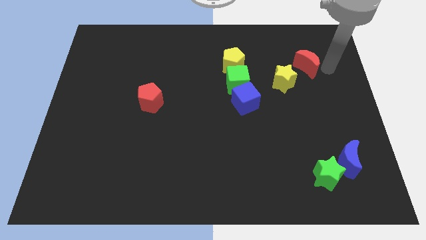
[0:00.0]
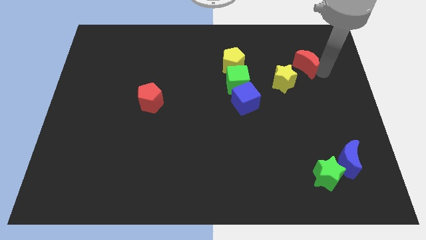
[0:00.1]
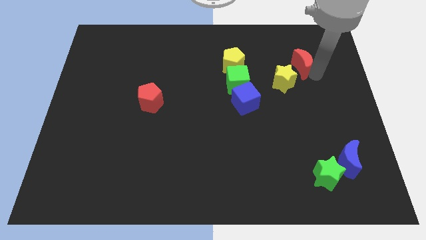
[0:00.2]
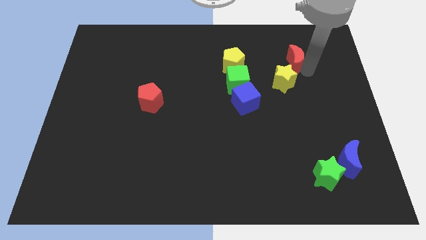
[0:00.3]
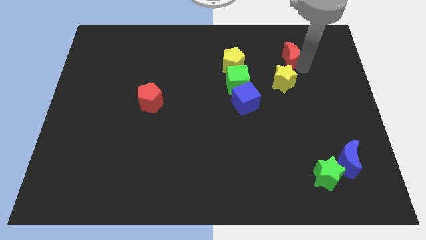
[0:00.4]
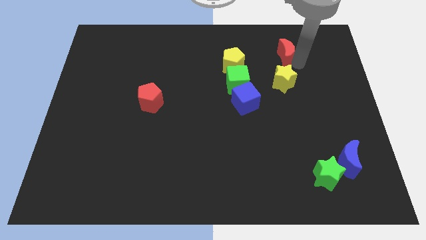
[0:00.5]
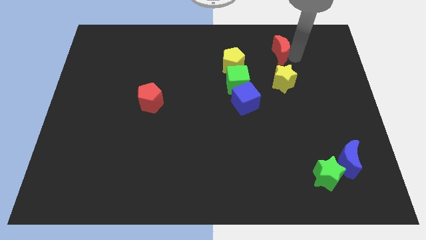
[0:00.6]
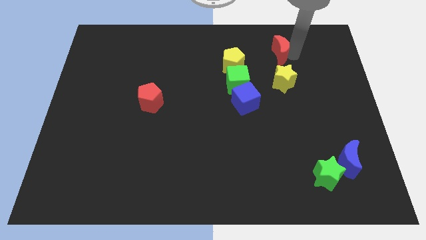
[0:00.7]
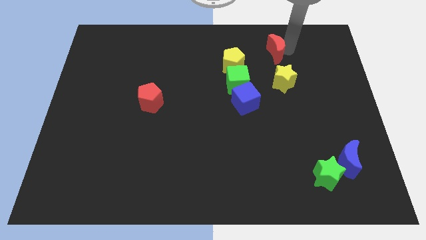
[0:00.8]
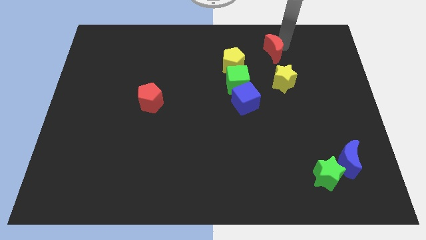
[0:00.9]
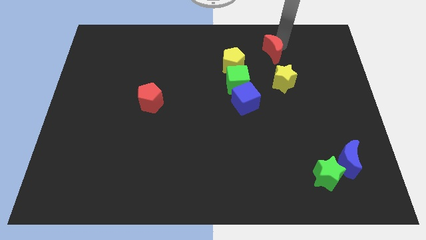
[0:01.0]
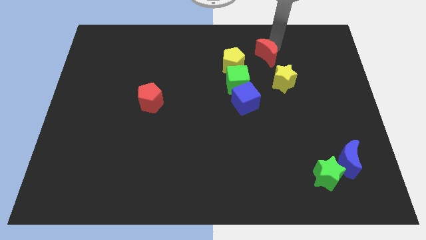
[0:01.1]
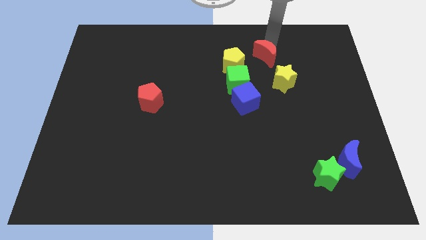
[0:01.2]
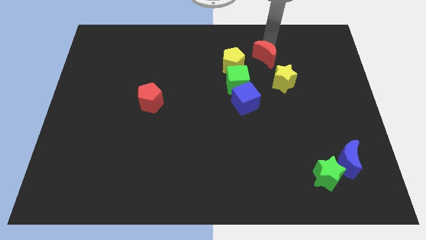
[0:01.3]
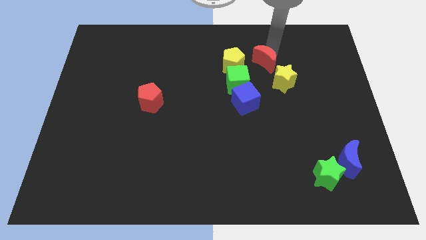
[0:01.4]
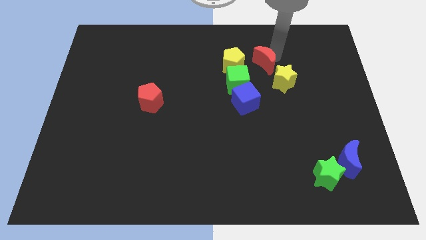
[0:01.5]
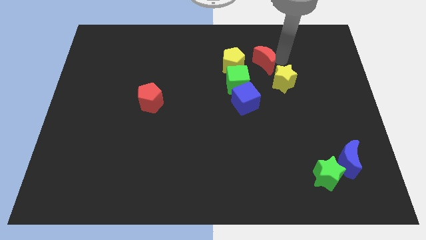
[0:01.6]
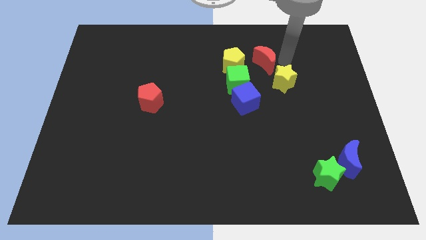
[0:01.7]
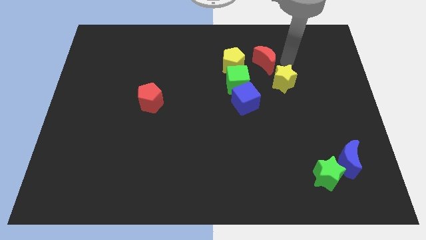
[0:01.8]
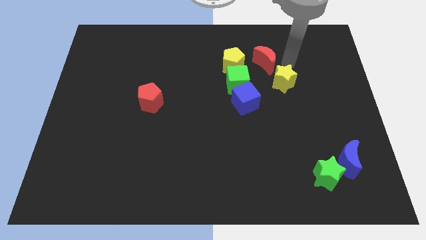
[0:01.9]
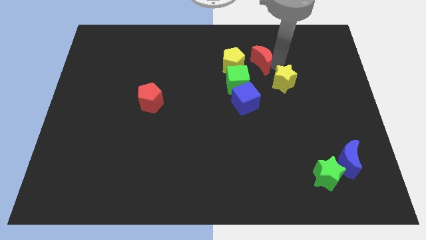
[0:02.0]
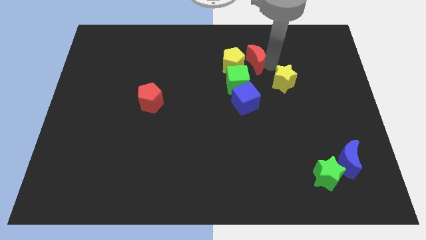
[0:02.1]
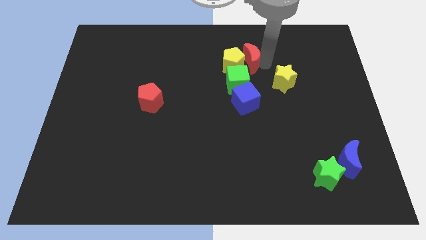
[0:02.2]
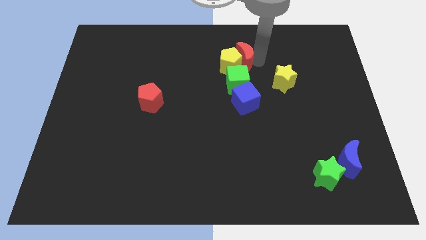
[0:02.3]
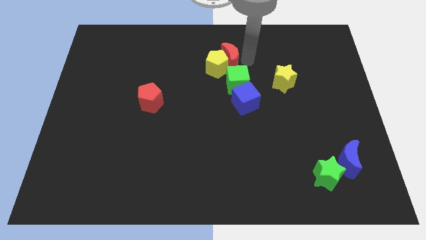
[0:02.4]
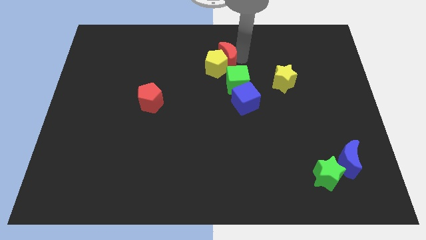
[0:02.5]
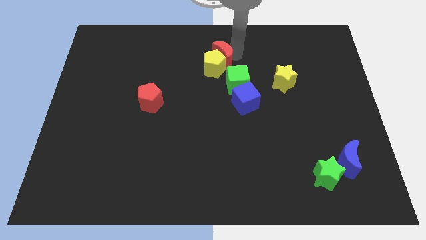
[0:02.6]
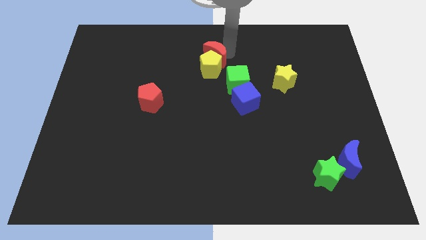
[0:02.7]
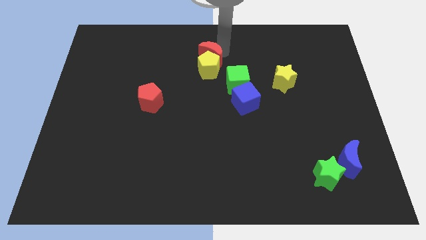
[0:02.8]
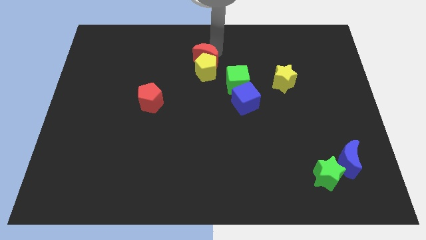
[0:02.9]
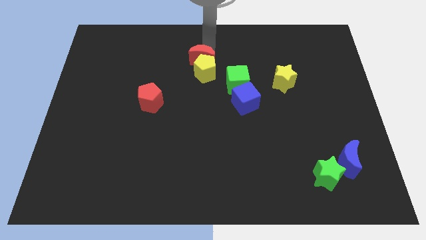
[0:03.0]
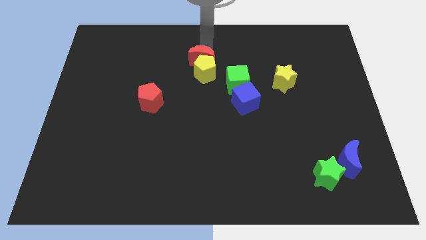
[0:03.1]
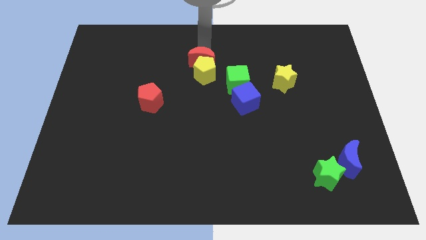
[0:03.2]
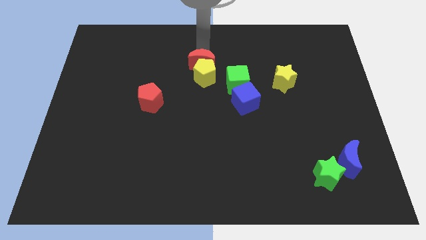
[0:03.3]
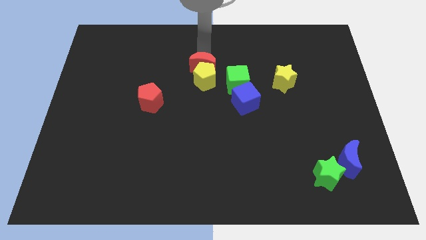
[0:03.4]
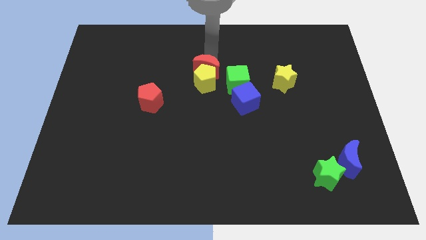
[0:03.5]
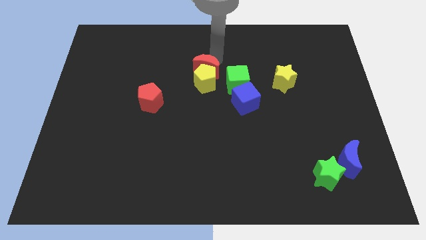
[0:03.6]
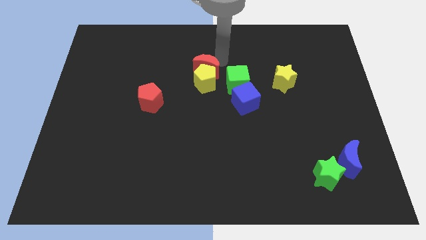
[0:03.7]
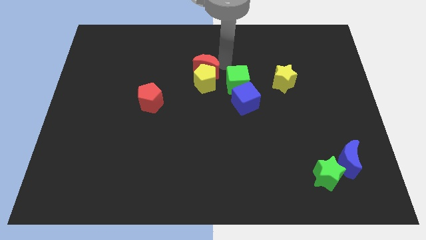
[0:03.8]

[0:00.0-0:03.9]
move the red crescent along with yellow pentagon to the left side of the green cube

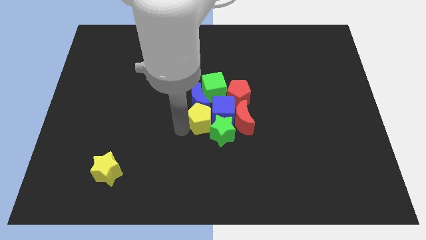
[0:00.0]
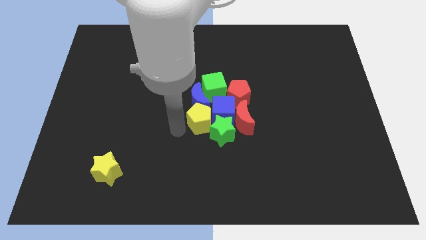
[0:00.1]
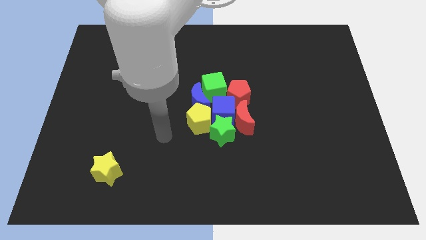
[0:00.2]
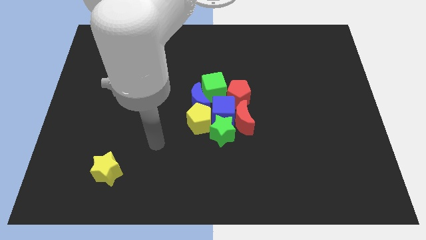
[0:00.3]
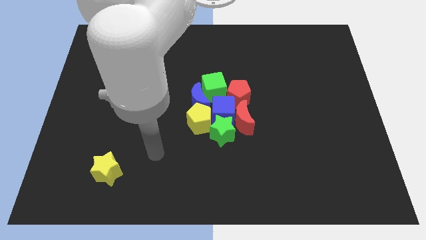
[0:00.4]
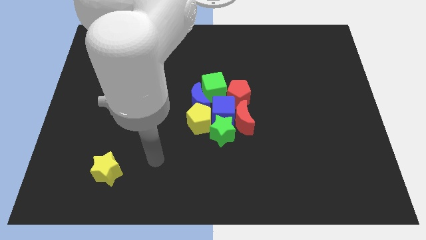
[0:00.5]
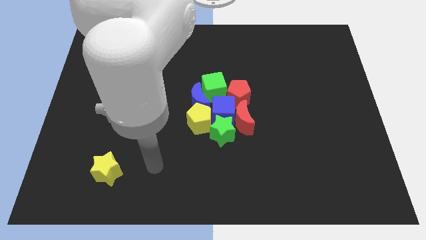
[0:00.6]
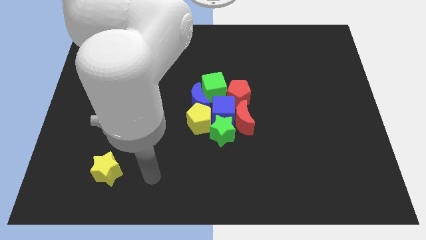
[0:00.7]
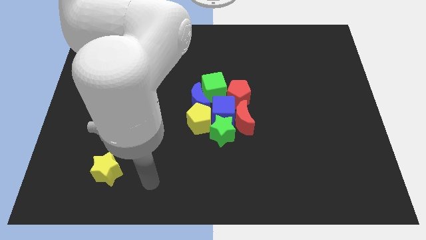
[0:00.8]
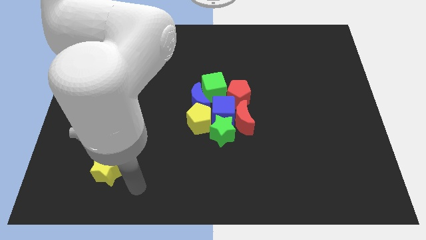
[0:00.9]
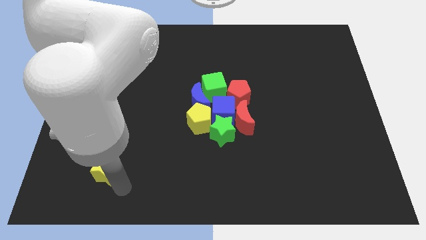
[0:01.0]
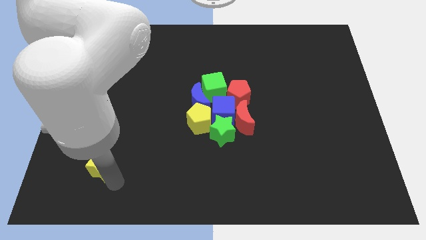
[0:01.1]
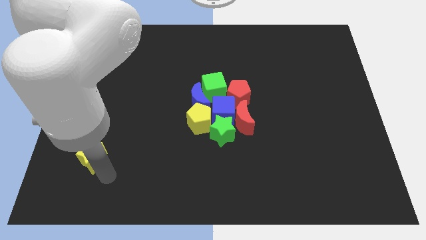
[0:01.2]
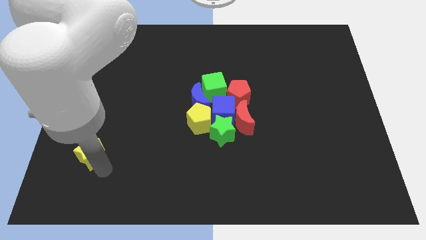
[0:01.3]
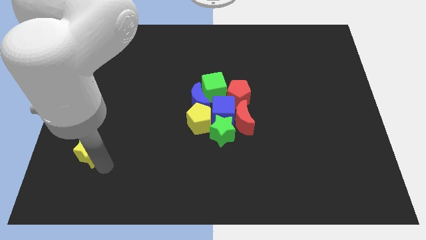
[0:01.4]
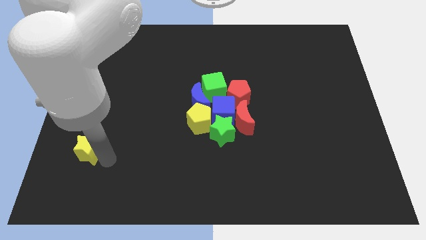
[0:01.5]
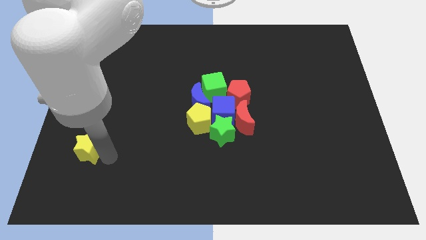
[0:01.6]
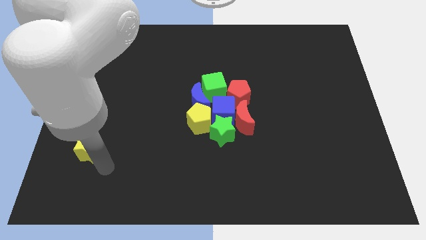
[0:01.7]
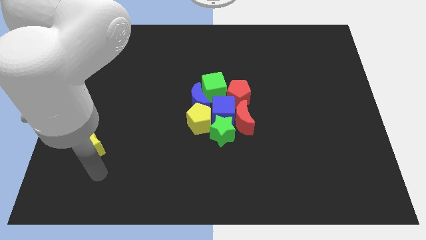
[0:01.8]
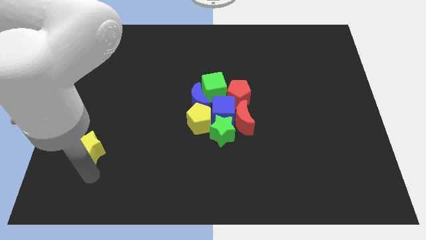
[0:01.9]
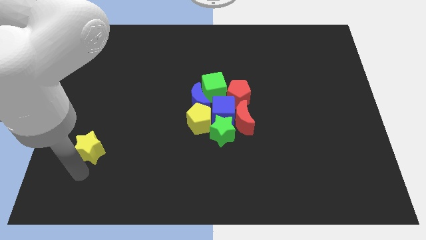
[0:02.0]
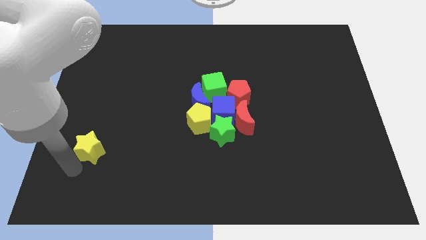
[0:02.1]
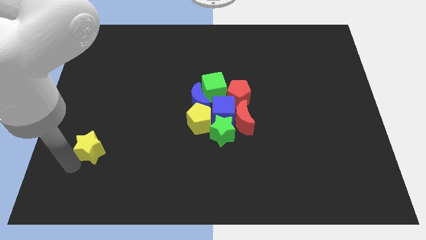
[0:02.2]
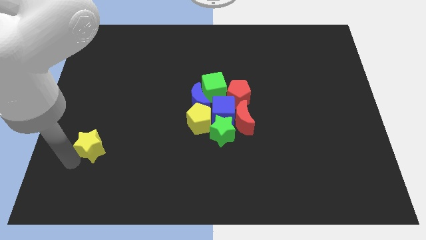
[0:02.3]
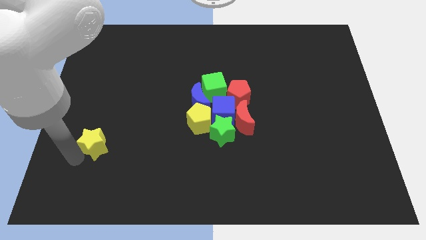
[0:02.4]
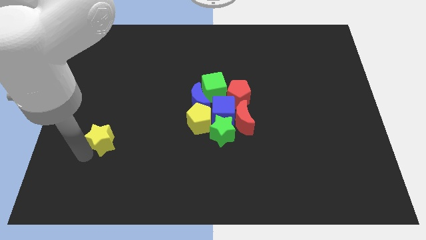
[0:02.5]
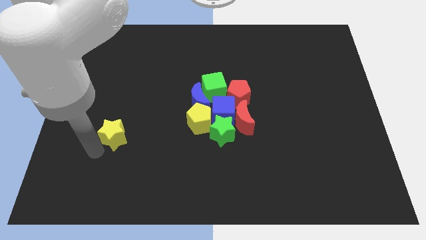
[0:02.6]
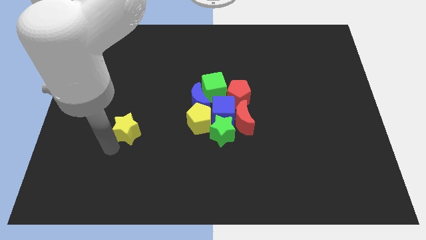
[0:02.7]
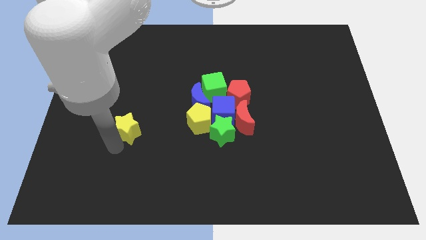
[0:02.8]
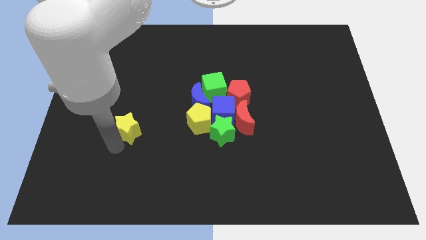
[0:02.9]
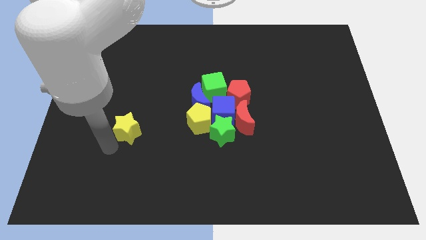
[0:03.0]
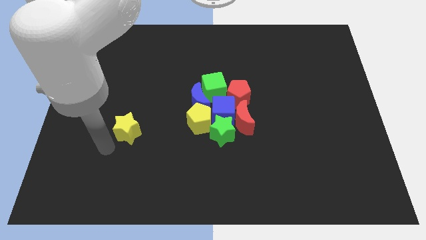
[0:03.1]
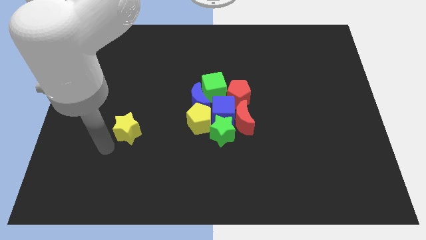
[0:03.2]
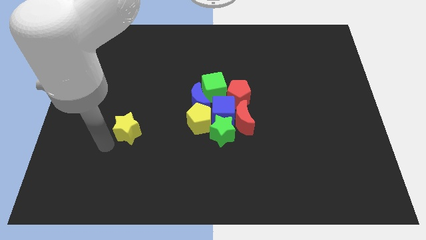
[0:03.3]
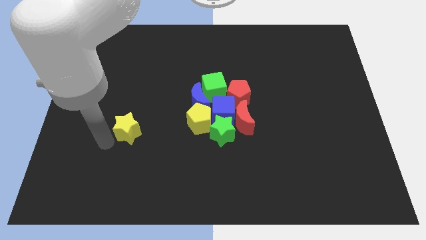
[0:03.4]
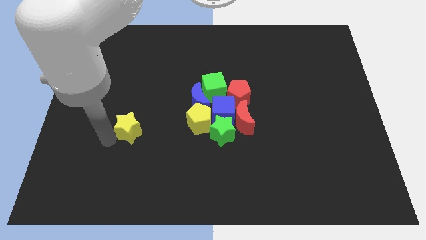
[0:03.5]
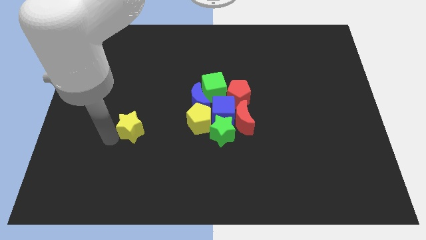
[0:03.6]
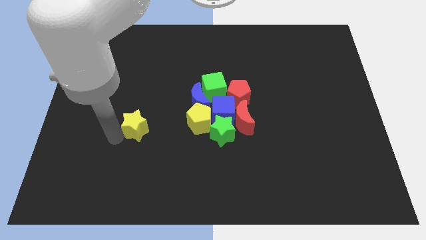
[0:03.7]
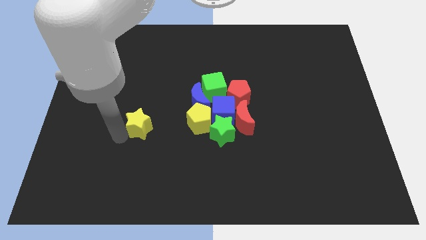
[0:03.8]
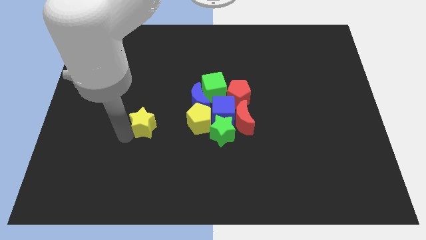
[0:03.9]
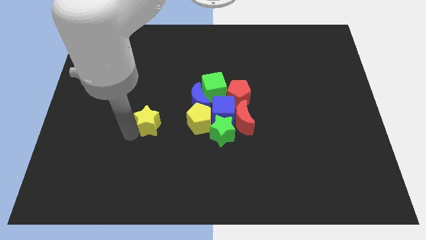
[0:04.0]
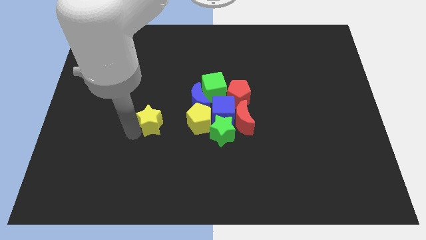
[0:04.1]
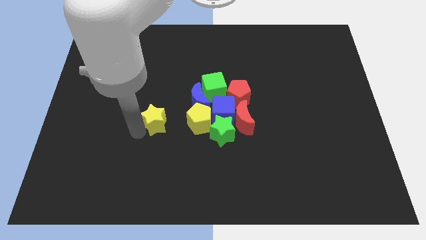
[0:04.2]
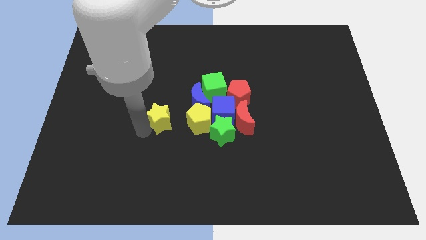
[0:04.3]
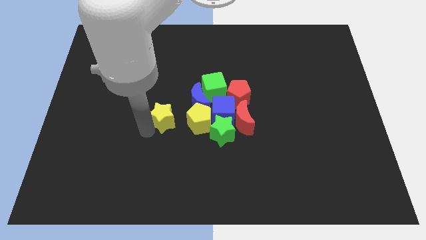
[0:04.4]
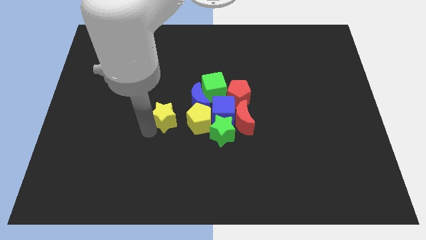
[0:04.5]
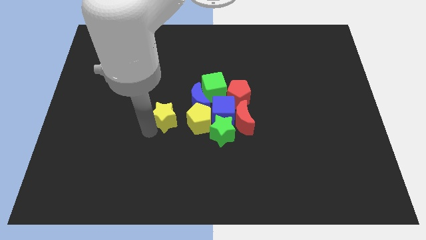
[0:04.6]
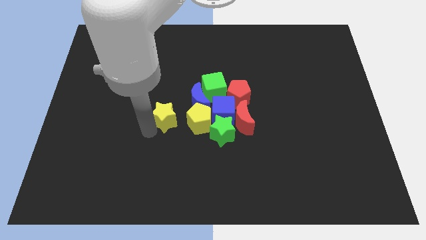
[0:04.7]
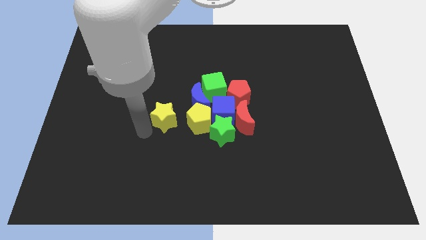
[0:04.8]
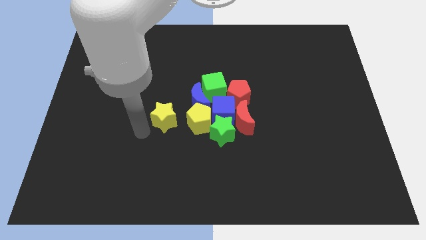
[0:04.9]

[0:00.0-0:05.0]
place the yellow star left to the yellow pentagon

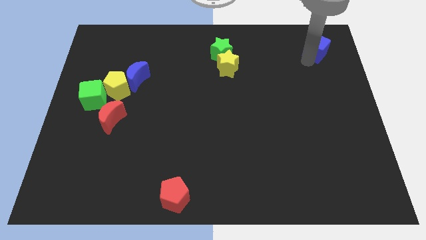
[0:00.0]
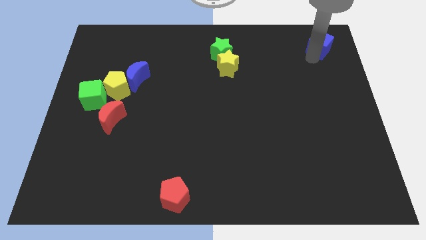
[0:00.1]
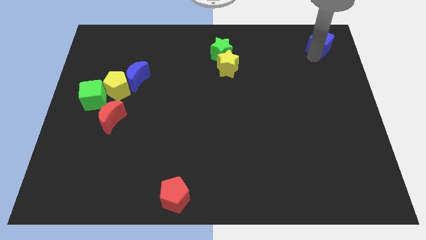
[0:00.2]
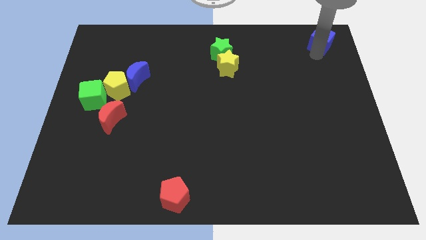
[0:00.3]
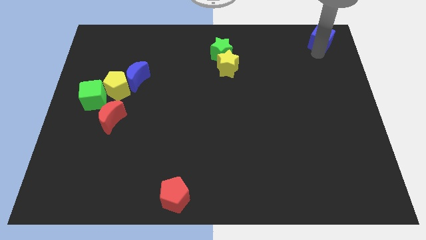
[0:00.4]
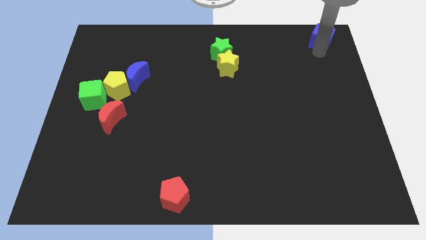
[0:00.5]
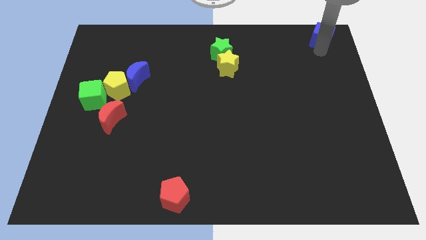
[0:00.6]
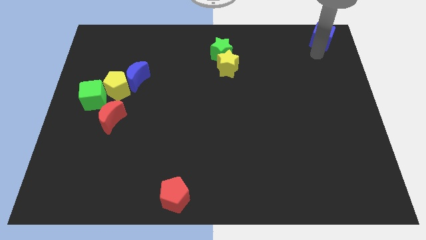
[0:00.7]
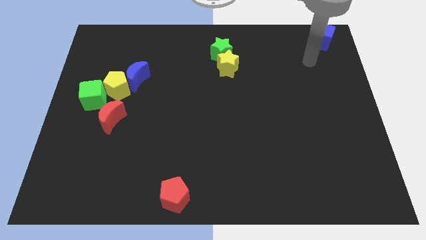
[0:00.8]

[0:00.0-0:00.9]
place blue cube at top right corner
